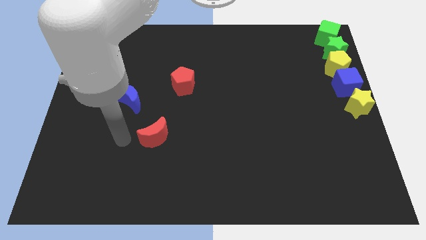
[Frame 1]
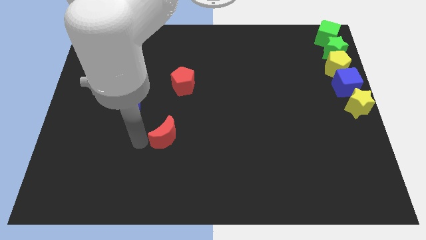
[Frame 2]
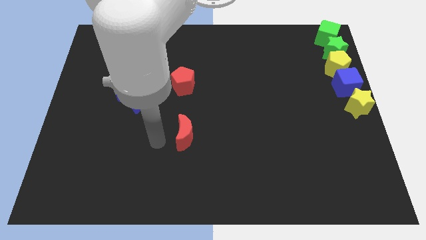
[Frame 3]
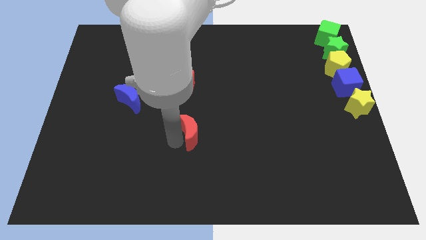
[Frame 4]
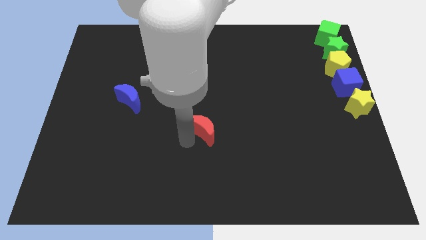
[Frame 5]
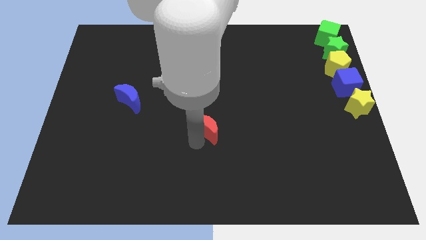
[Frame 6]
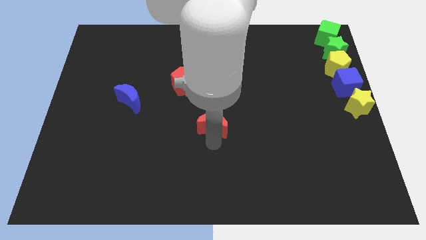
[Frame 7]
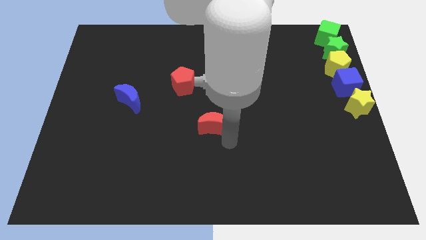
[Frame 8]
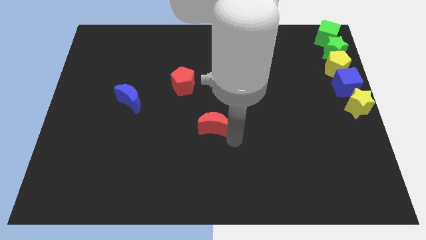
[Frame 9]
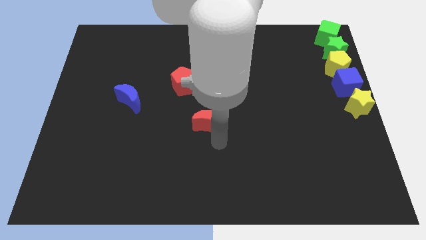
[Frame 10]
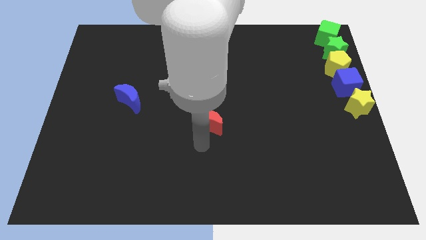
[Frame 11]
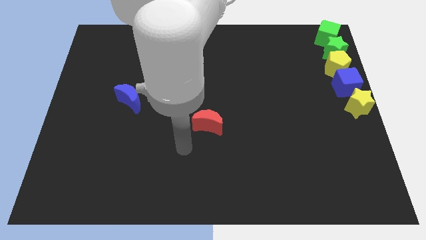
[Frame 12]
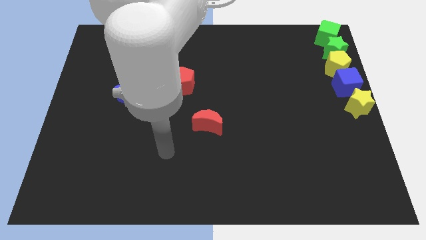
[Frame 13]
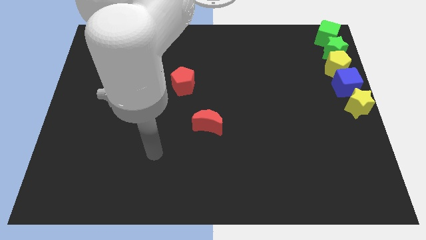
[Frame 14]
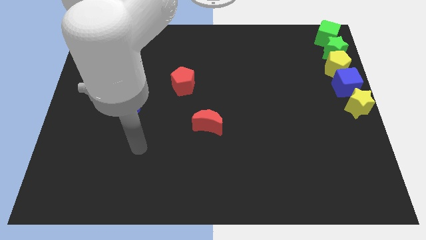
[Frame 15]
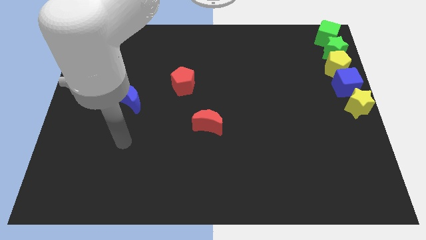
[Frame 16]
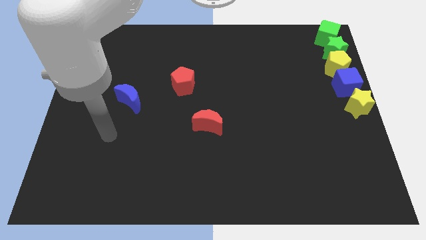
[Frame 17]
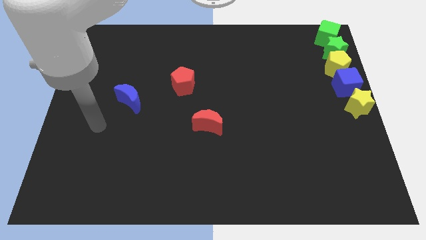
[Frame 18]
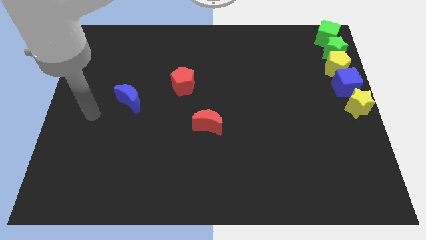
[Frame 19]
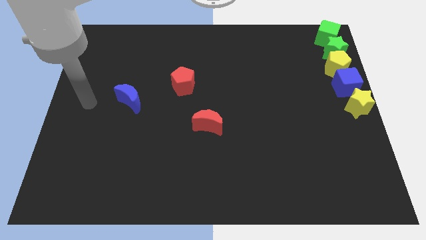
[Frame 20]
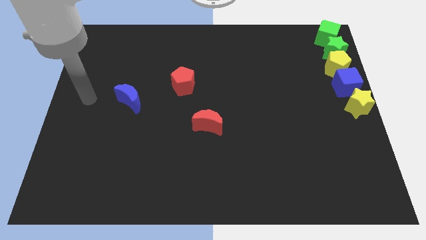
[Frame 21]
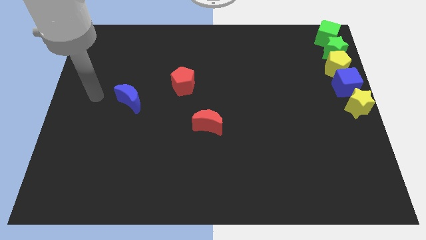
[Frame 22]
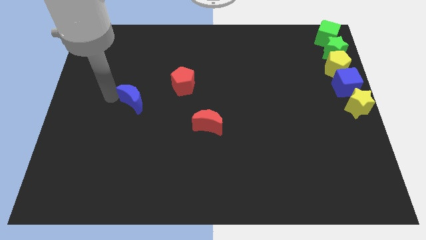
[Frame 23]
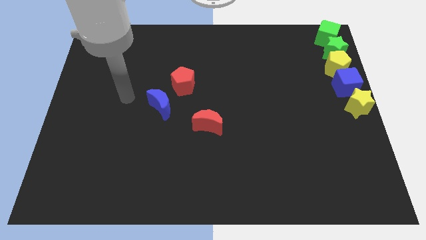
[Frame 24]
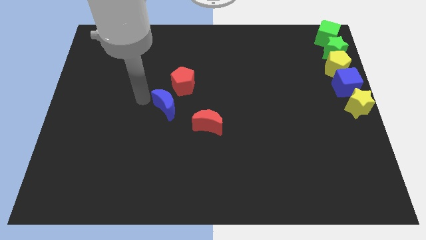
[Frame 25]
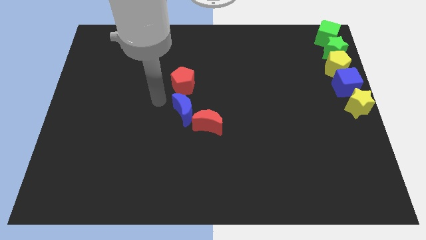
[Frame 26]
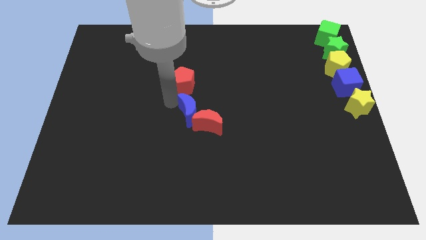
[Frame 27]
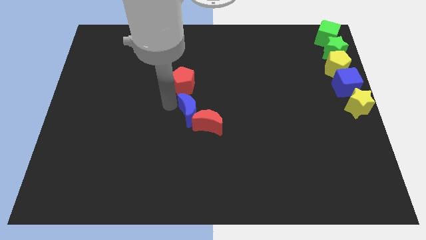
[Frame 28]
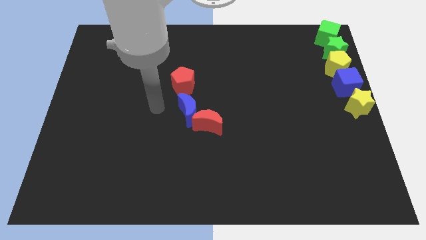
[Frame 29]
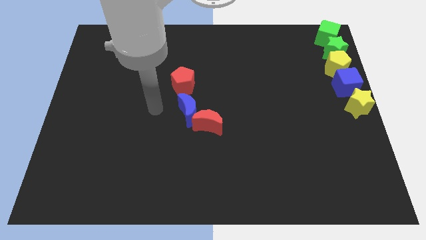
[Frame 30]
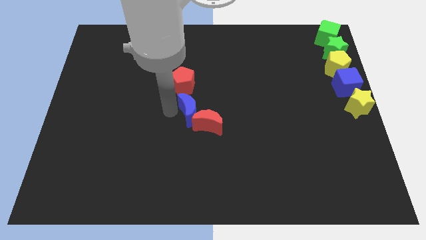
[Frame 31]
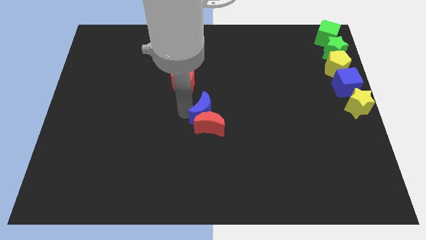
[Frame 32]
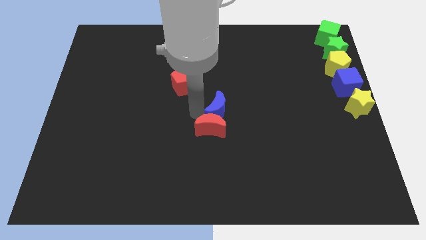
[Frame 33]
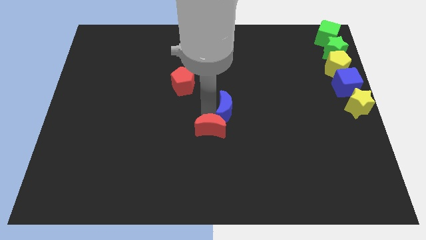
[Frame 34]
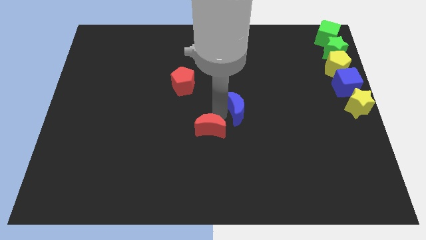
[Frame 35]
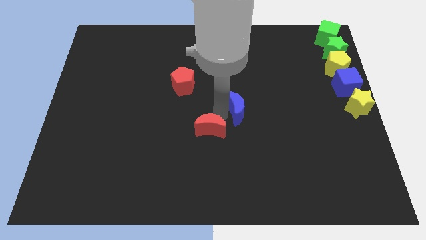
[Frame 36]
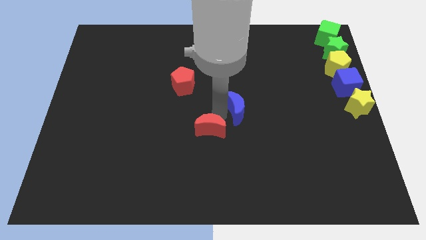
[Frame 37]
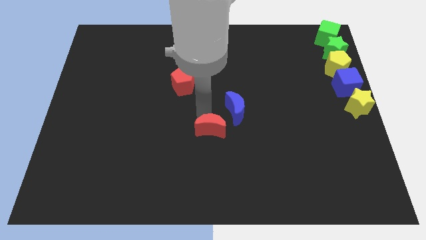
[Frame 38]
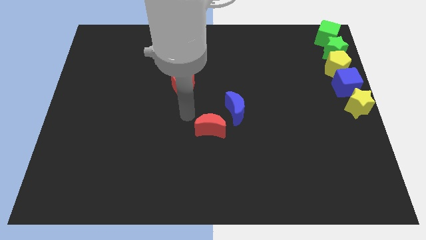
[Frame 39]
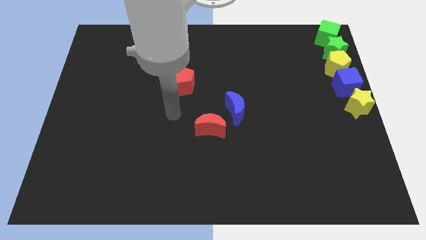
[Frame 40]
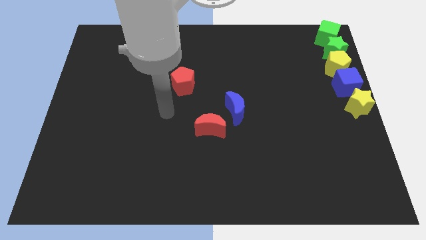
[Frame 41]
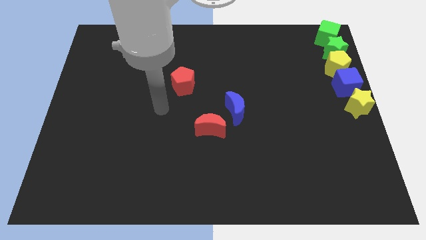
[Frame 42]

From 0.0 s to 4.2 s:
place the crescents at the center of the board

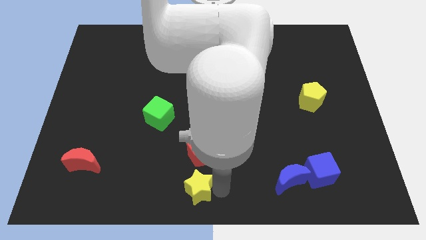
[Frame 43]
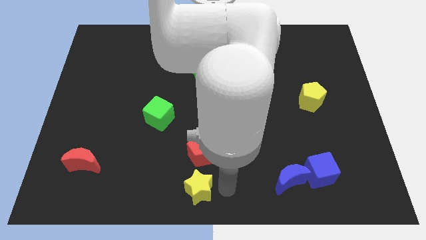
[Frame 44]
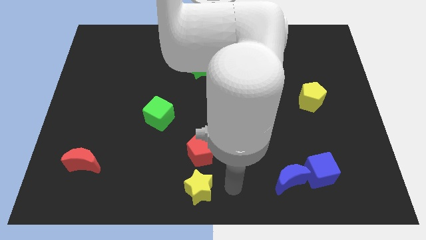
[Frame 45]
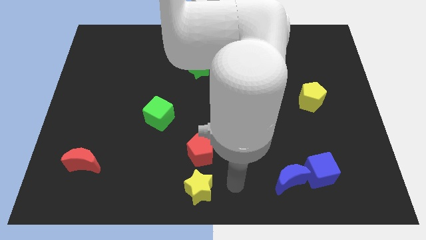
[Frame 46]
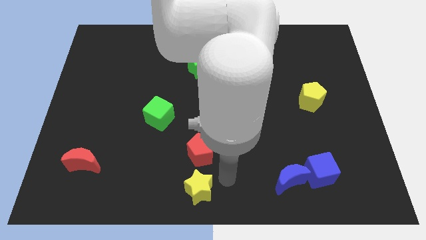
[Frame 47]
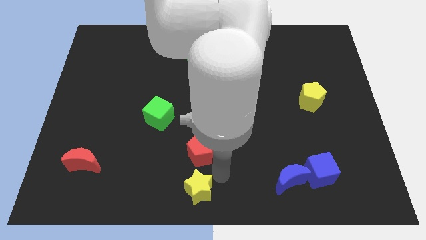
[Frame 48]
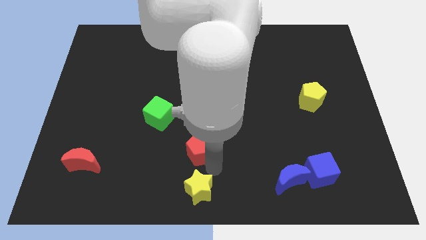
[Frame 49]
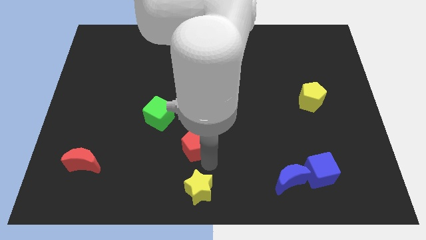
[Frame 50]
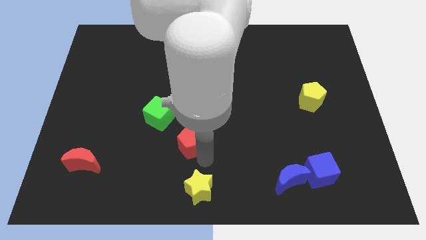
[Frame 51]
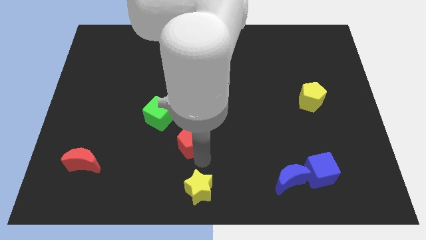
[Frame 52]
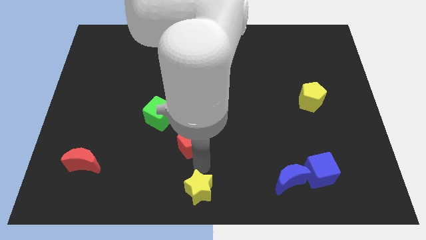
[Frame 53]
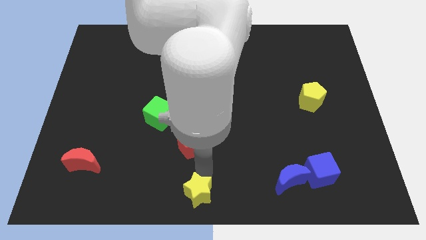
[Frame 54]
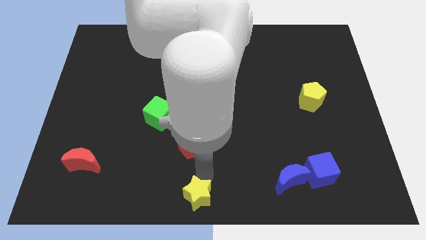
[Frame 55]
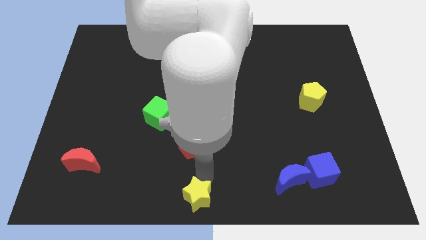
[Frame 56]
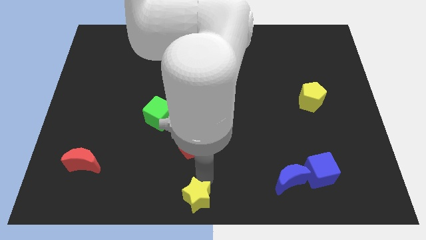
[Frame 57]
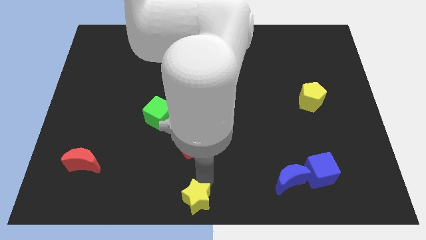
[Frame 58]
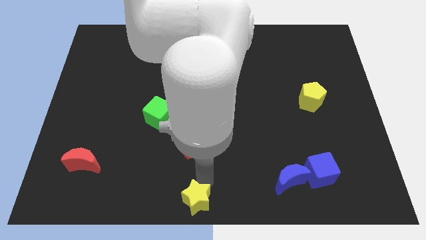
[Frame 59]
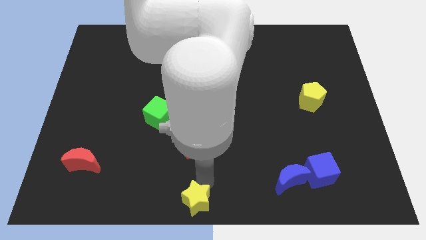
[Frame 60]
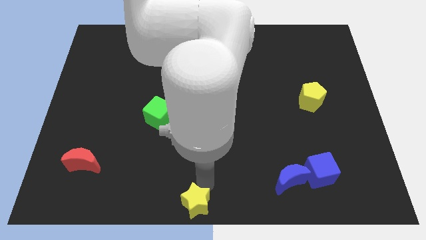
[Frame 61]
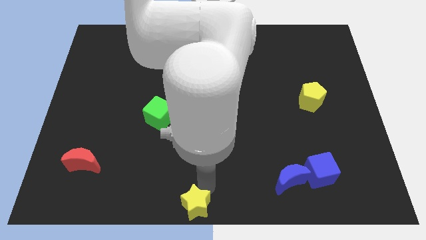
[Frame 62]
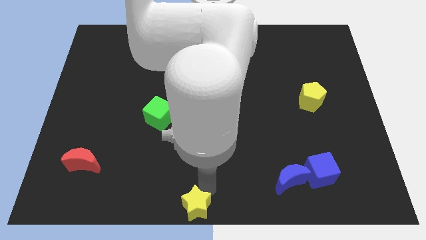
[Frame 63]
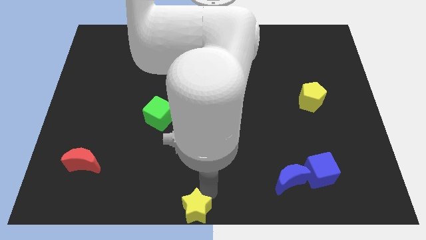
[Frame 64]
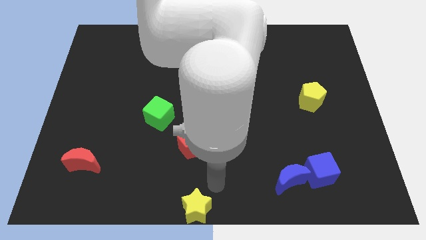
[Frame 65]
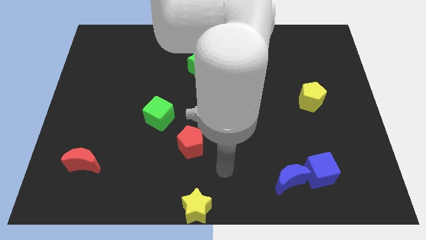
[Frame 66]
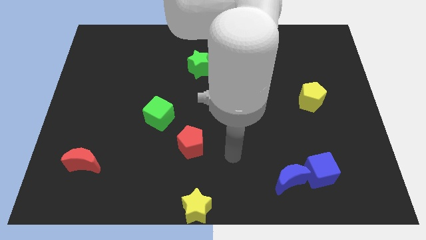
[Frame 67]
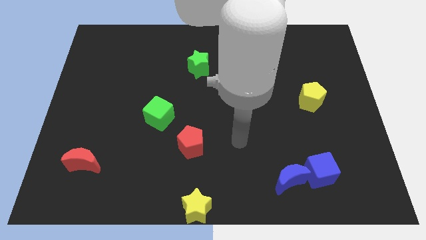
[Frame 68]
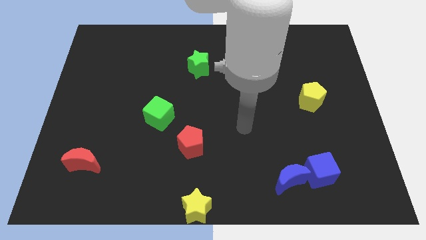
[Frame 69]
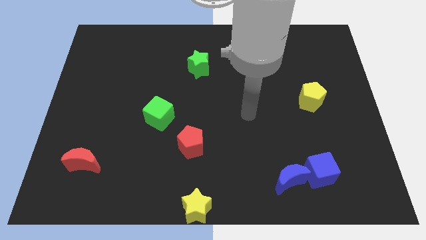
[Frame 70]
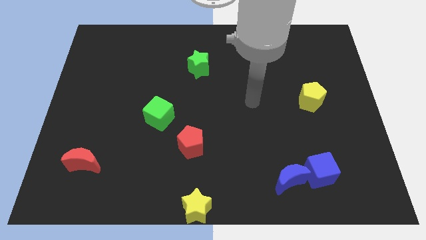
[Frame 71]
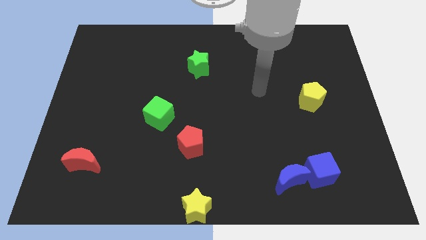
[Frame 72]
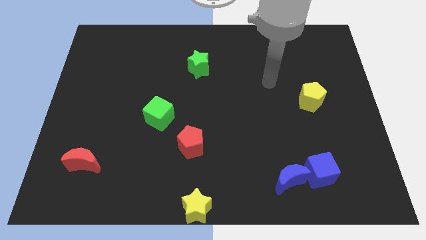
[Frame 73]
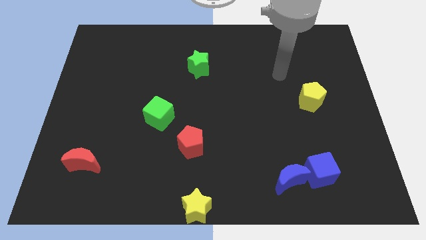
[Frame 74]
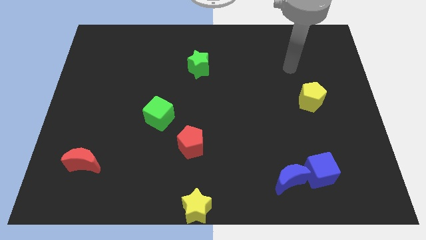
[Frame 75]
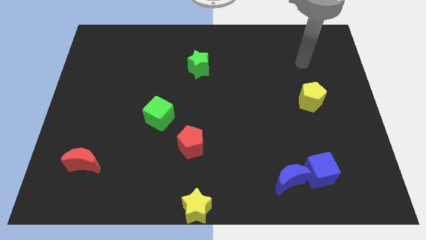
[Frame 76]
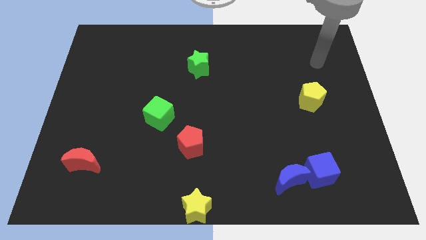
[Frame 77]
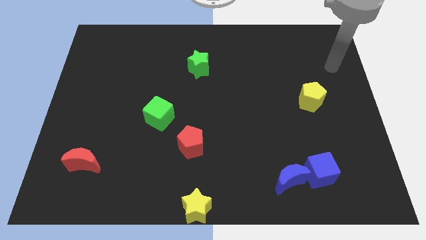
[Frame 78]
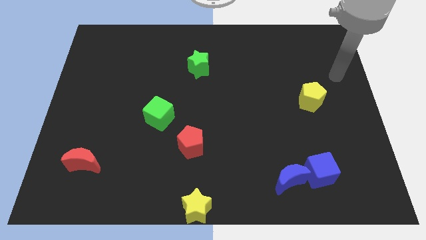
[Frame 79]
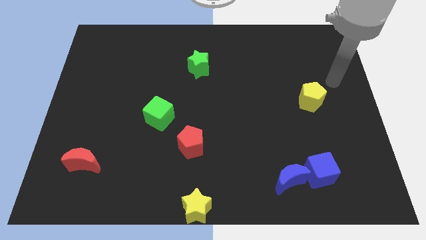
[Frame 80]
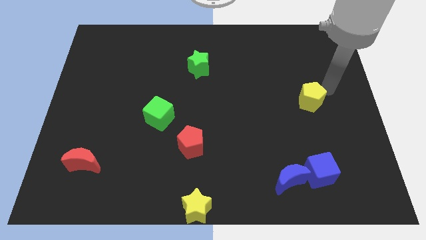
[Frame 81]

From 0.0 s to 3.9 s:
move arm to the yellow pentagon

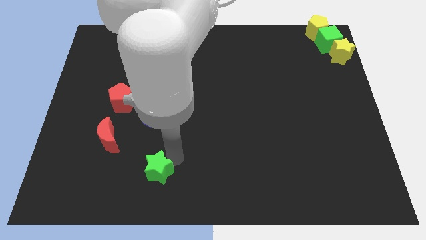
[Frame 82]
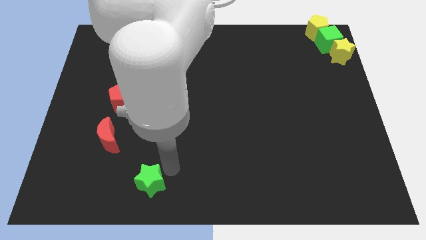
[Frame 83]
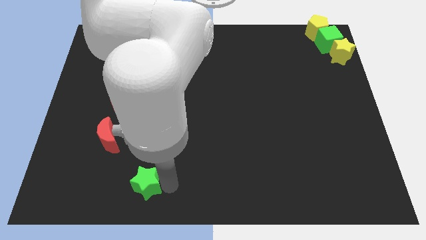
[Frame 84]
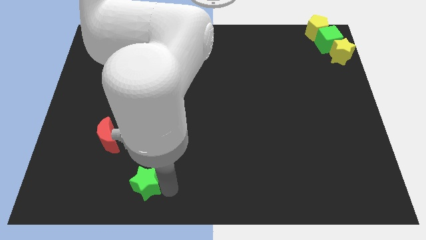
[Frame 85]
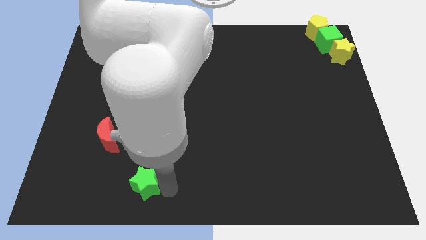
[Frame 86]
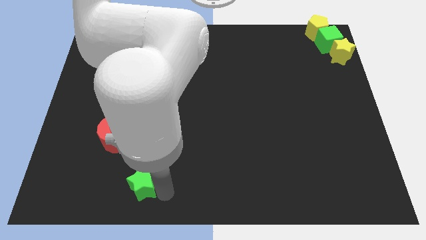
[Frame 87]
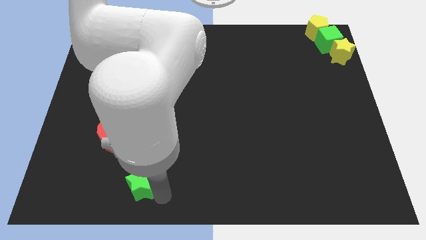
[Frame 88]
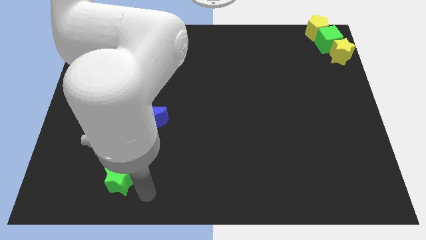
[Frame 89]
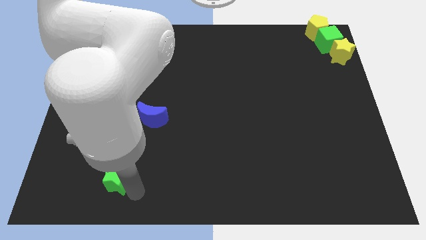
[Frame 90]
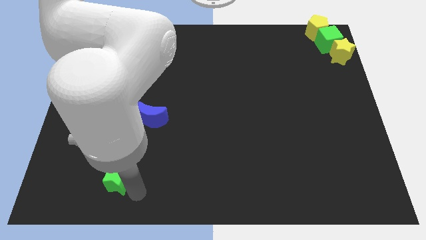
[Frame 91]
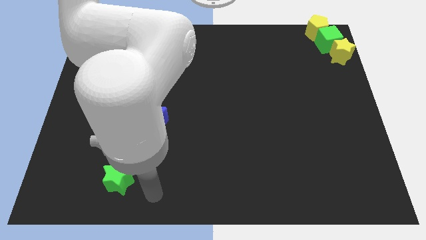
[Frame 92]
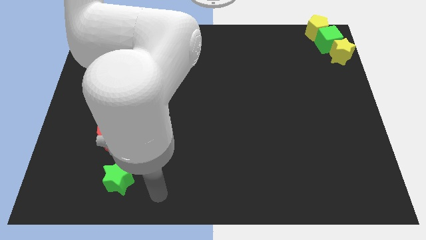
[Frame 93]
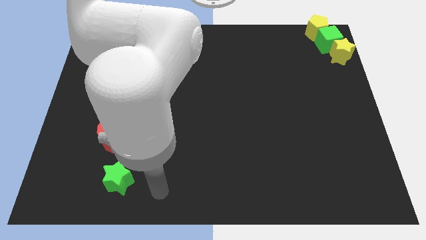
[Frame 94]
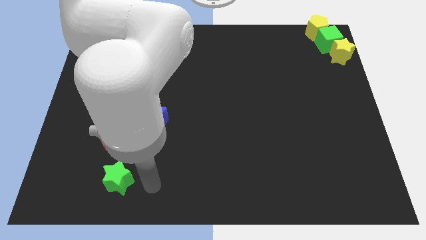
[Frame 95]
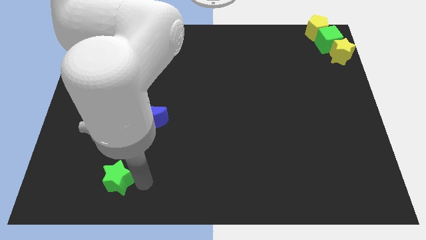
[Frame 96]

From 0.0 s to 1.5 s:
place the green star down to the red moon
